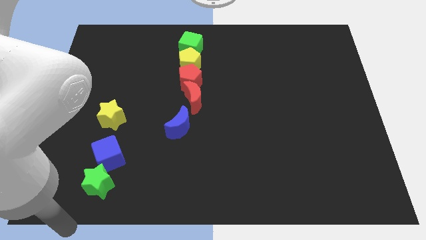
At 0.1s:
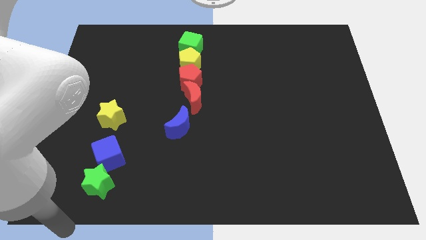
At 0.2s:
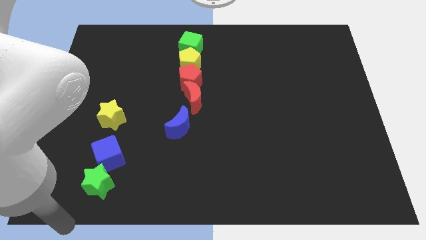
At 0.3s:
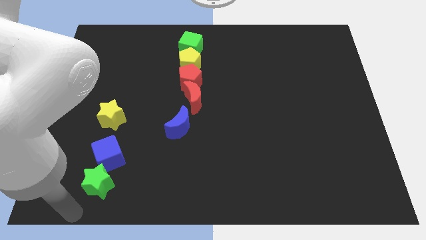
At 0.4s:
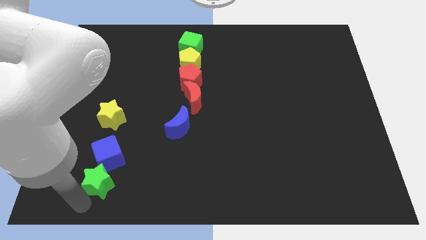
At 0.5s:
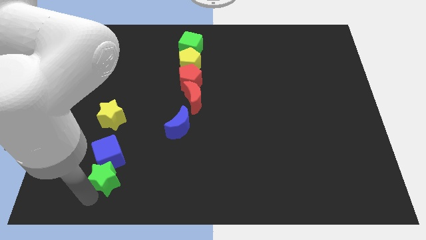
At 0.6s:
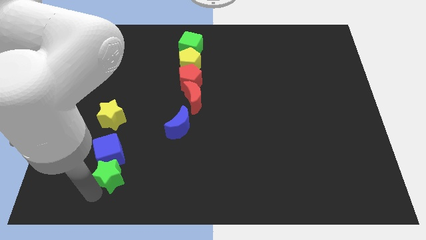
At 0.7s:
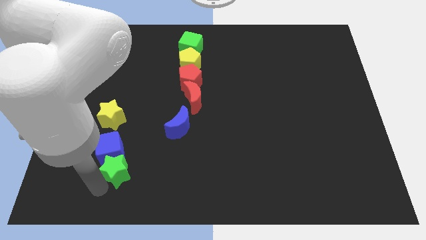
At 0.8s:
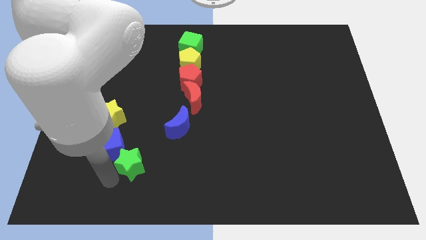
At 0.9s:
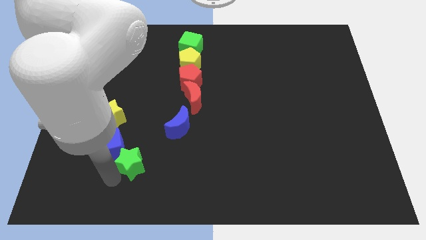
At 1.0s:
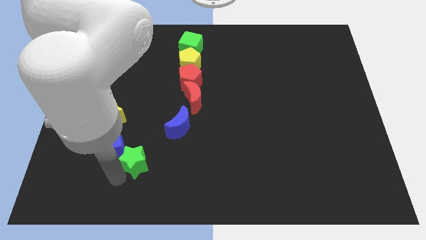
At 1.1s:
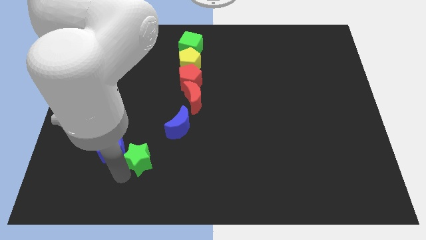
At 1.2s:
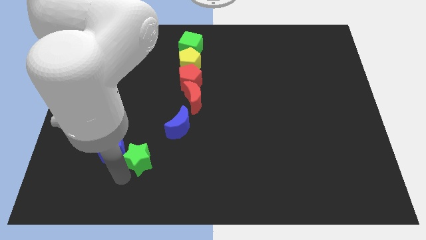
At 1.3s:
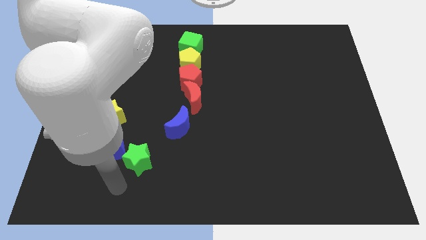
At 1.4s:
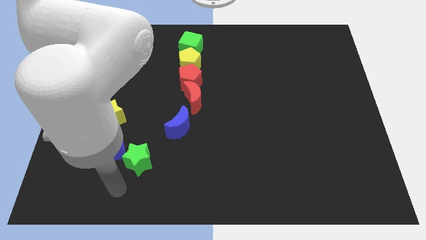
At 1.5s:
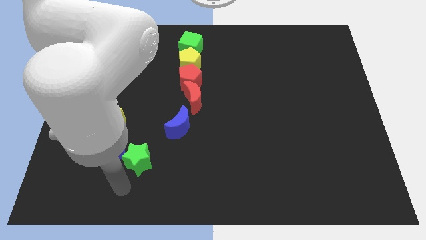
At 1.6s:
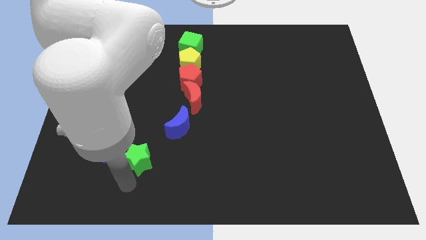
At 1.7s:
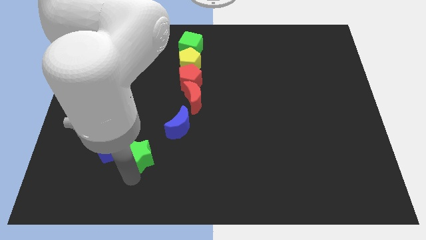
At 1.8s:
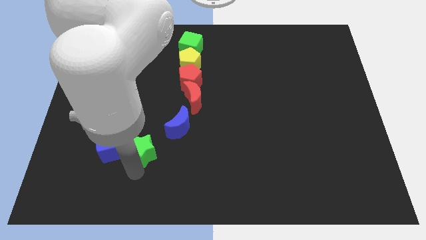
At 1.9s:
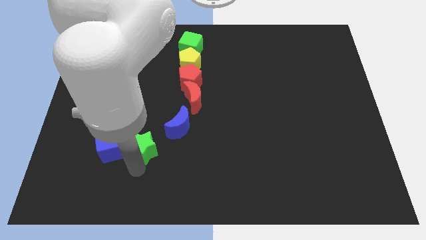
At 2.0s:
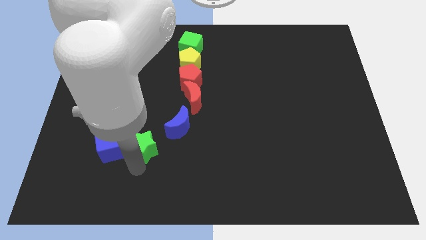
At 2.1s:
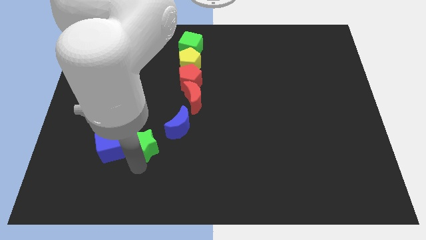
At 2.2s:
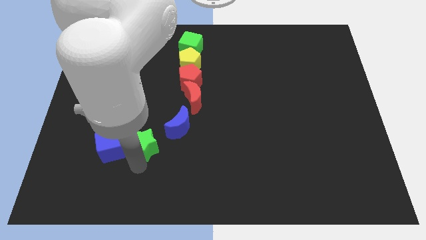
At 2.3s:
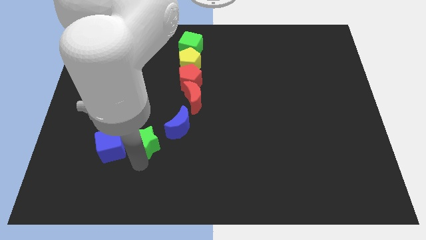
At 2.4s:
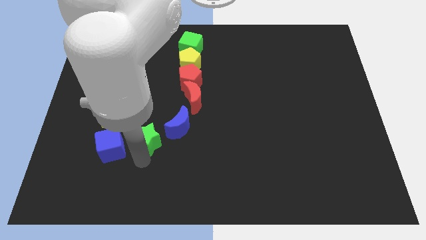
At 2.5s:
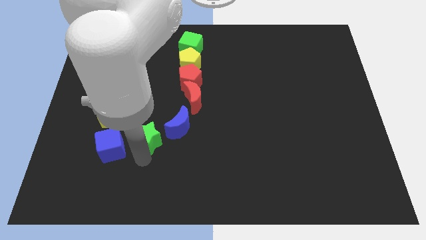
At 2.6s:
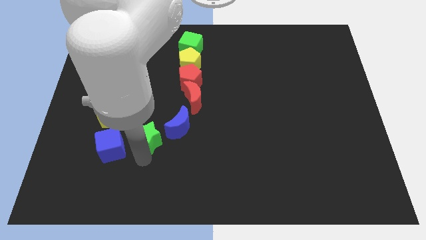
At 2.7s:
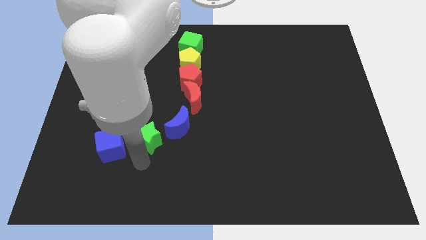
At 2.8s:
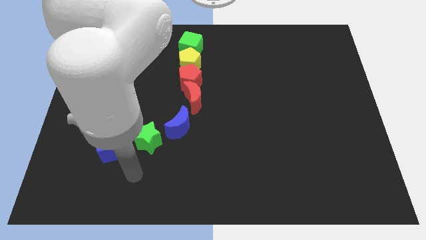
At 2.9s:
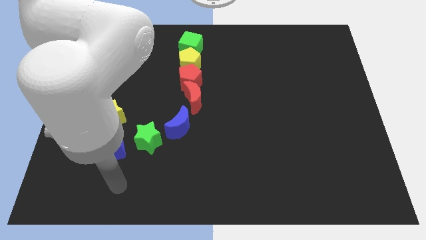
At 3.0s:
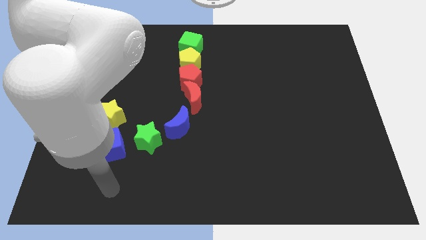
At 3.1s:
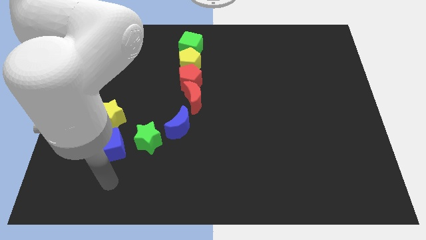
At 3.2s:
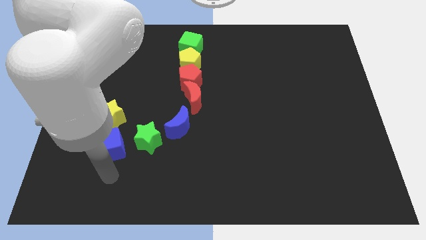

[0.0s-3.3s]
place the green star between blue blocks

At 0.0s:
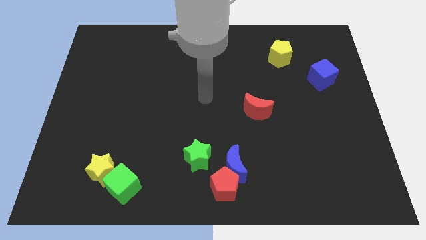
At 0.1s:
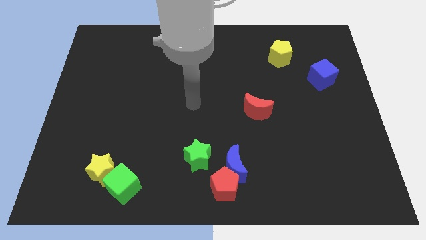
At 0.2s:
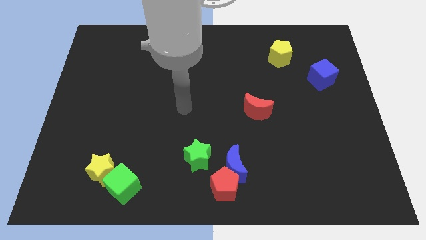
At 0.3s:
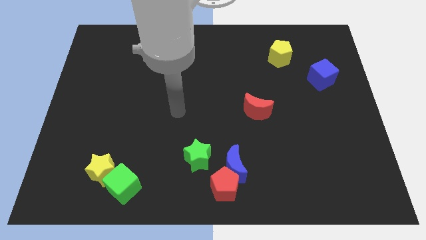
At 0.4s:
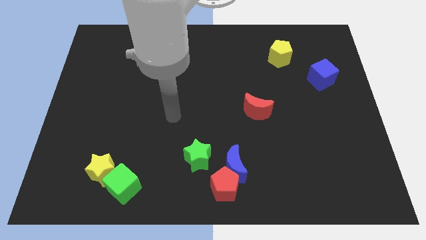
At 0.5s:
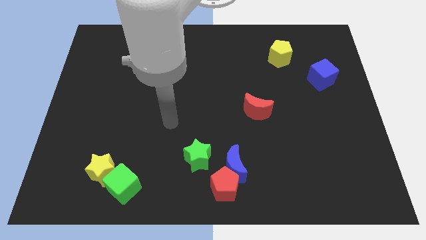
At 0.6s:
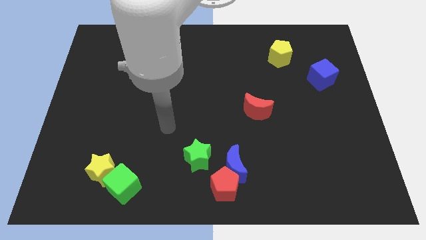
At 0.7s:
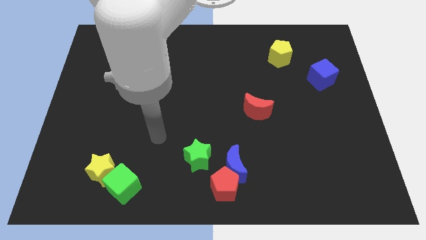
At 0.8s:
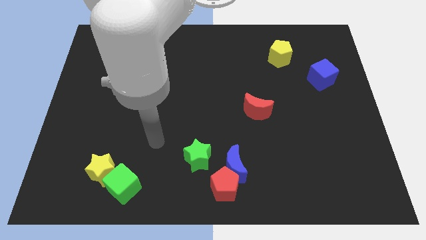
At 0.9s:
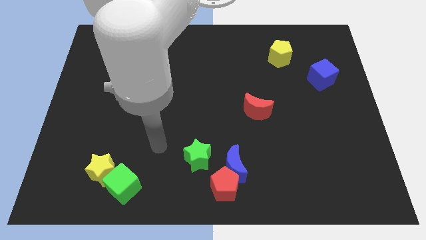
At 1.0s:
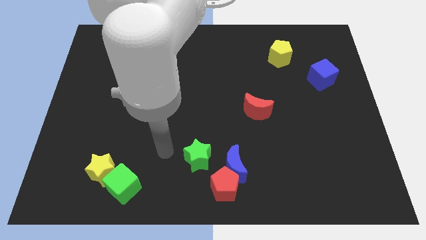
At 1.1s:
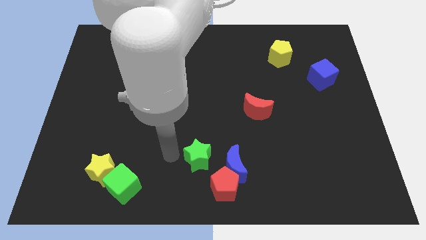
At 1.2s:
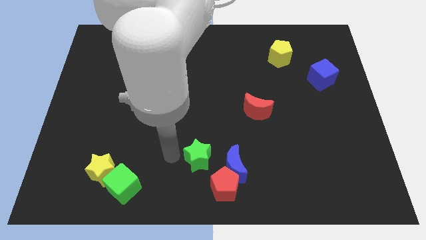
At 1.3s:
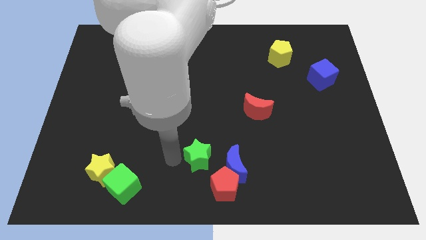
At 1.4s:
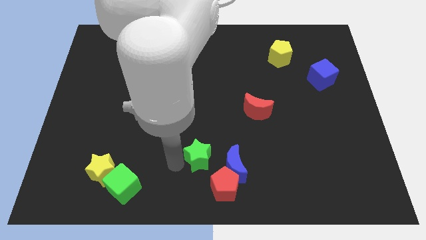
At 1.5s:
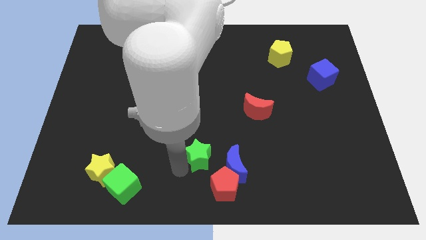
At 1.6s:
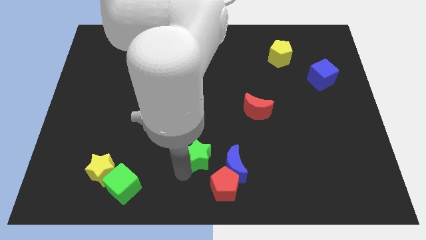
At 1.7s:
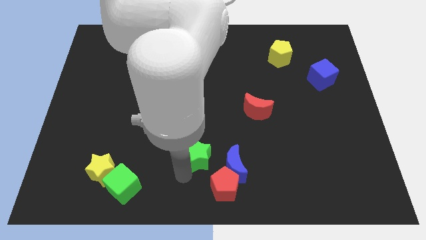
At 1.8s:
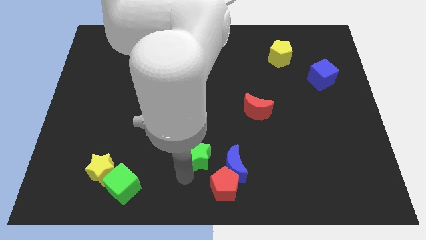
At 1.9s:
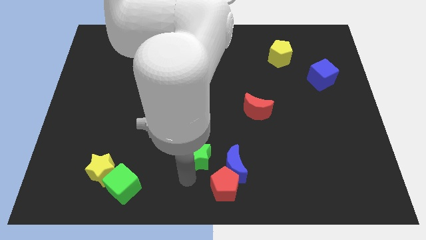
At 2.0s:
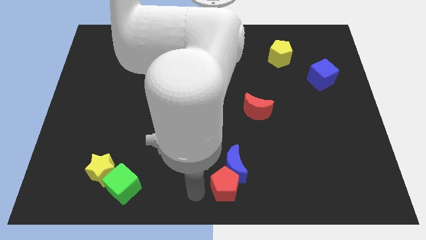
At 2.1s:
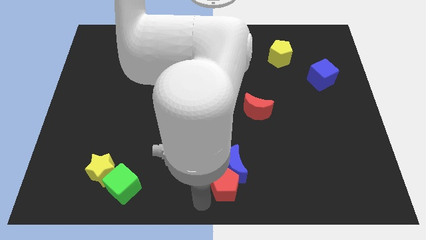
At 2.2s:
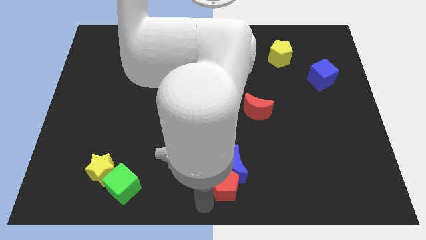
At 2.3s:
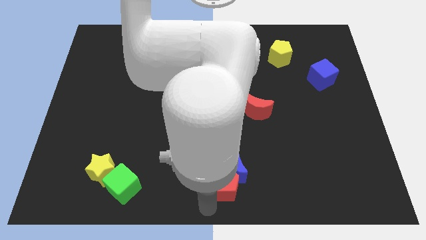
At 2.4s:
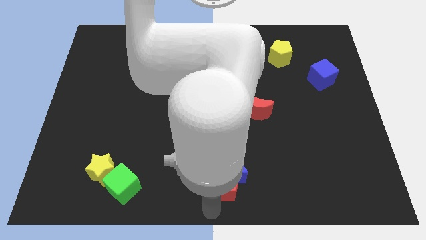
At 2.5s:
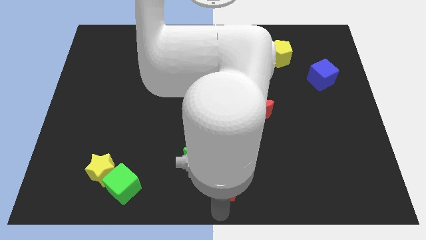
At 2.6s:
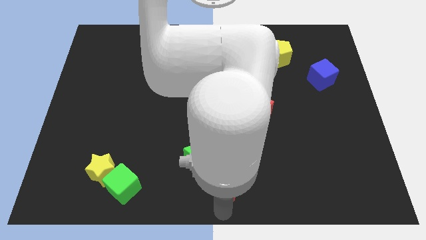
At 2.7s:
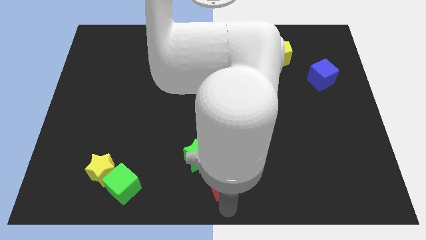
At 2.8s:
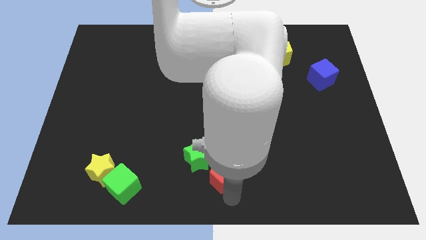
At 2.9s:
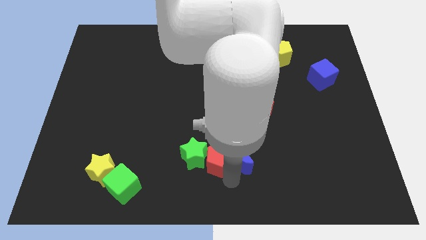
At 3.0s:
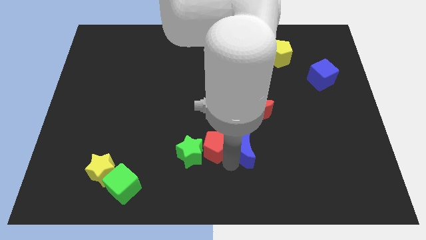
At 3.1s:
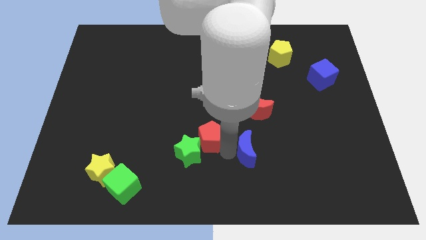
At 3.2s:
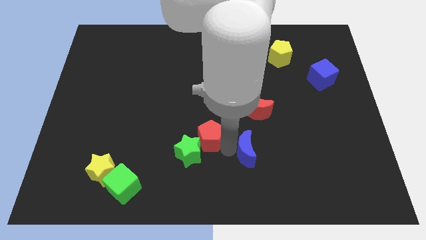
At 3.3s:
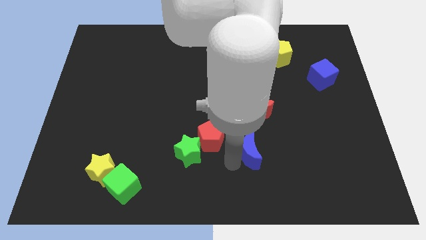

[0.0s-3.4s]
push the red pentagon to the top right of the green star

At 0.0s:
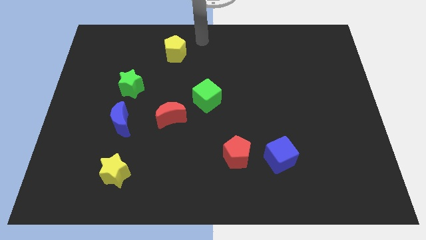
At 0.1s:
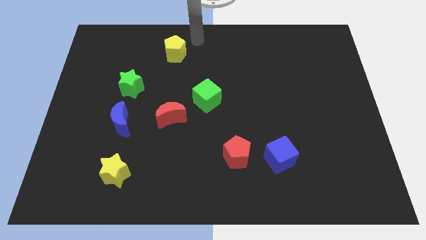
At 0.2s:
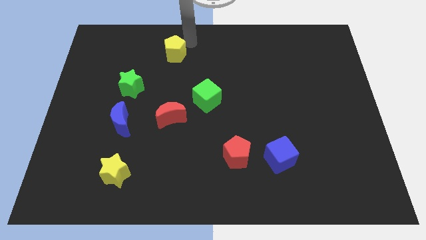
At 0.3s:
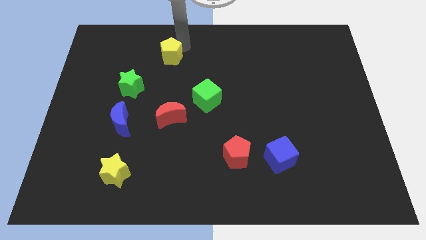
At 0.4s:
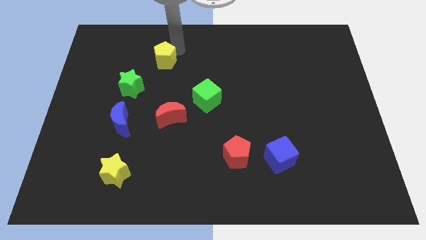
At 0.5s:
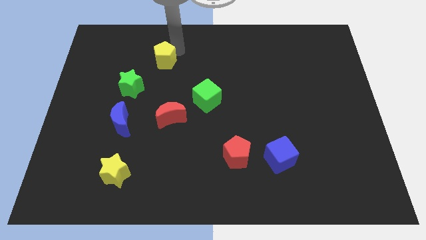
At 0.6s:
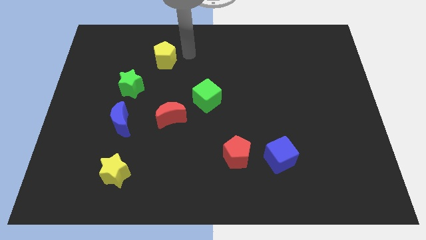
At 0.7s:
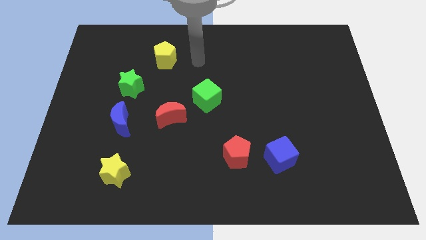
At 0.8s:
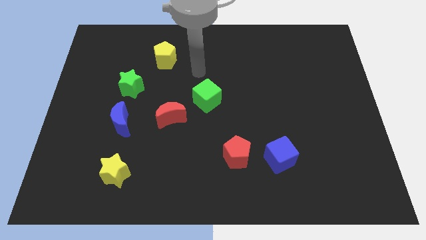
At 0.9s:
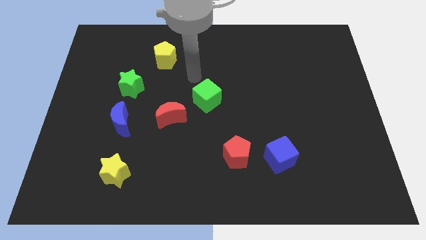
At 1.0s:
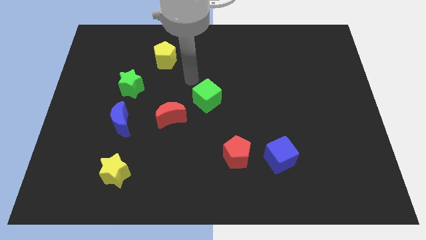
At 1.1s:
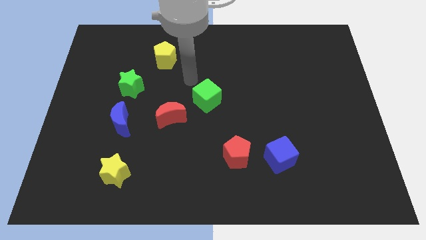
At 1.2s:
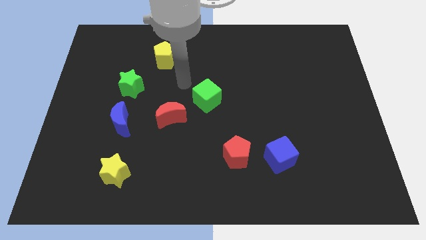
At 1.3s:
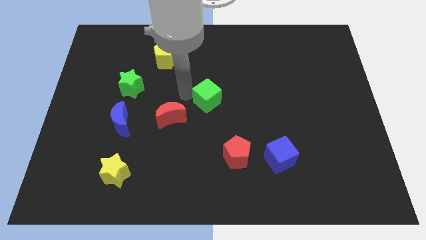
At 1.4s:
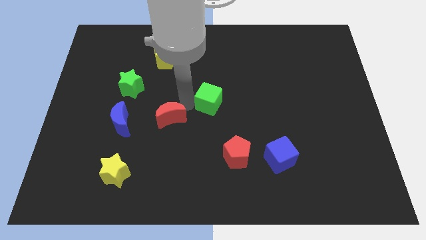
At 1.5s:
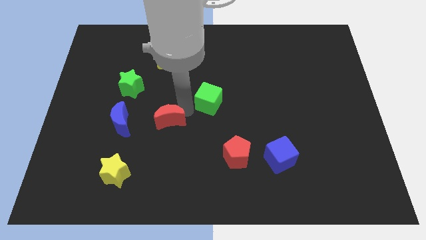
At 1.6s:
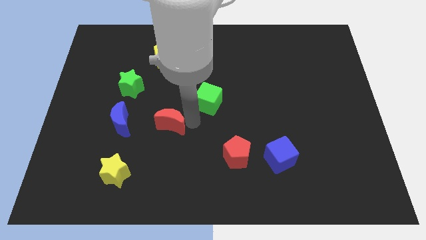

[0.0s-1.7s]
slightly push yellow pentagon diagonally downwards

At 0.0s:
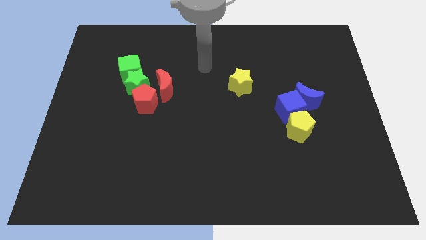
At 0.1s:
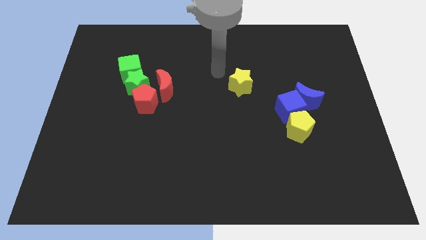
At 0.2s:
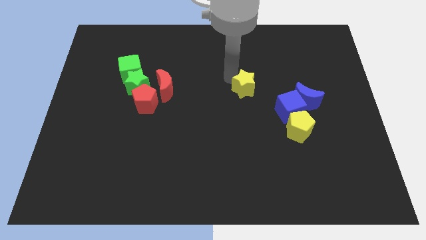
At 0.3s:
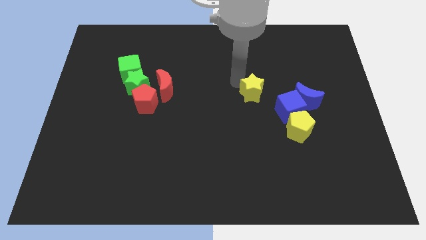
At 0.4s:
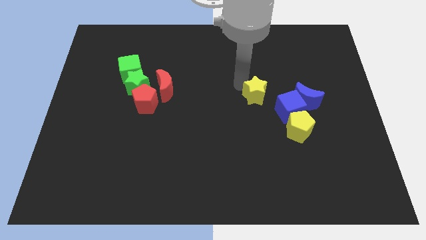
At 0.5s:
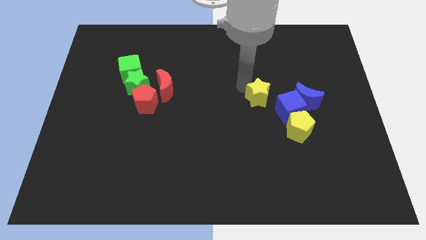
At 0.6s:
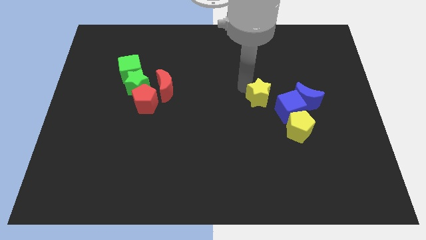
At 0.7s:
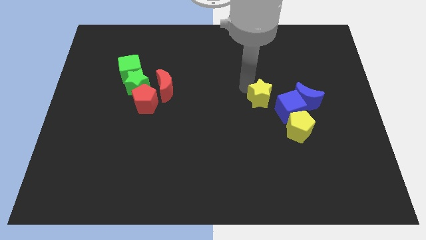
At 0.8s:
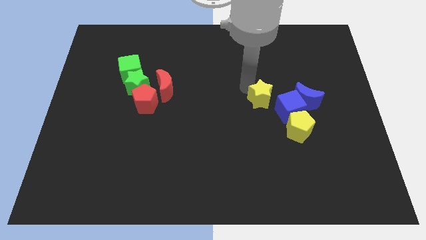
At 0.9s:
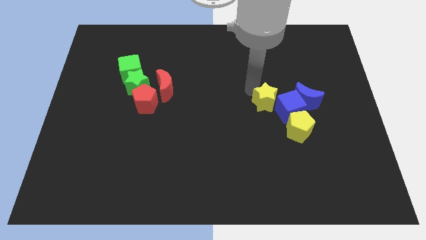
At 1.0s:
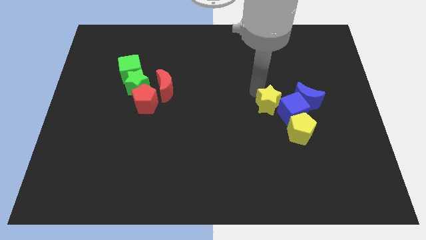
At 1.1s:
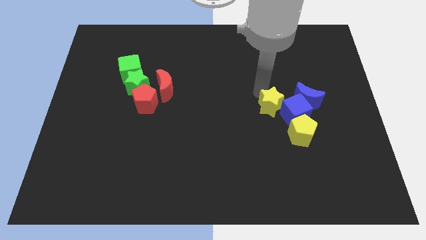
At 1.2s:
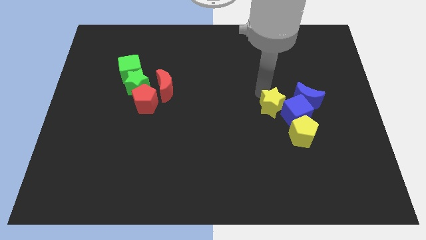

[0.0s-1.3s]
push the yellow star into the blue cube
